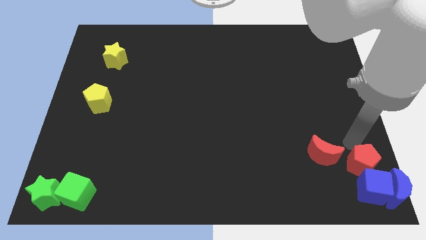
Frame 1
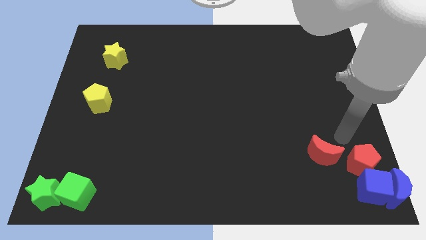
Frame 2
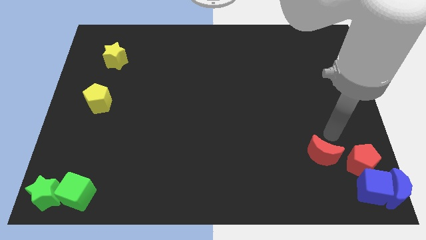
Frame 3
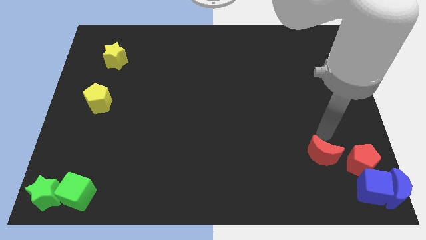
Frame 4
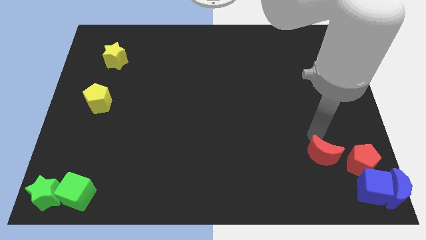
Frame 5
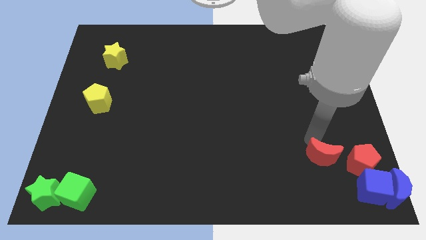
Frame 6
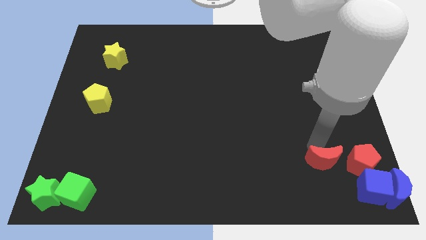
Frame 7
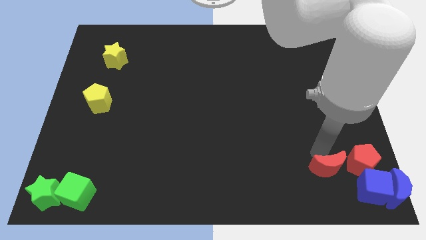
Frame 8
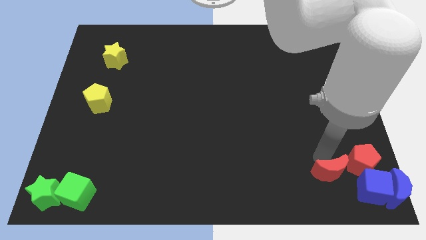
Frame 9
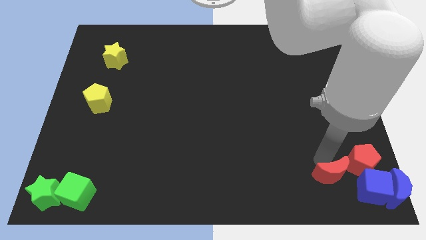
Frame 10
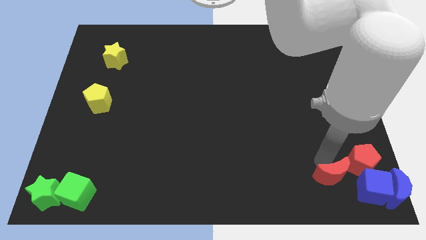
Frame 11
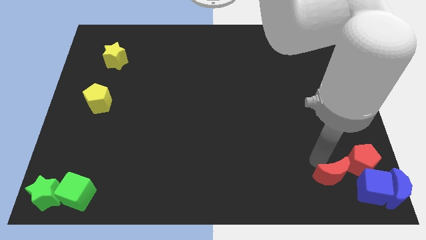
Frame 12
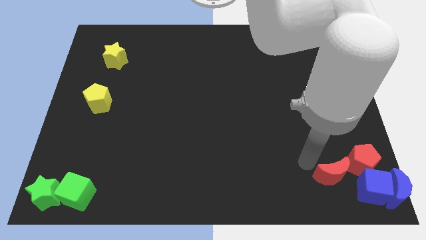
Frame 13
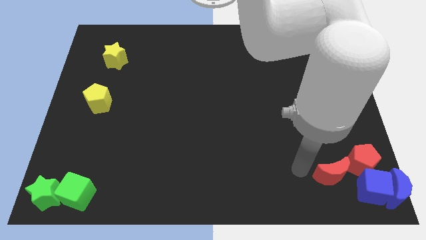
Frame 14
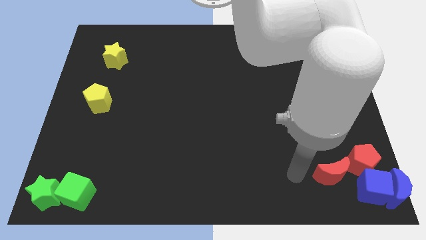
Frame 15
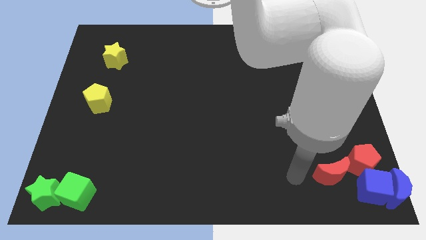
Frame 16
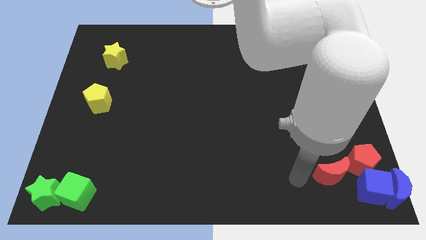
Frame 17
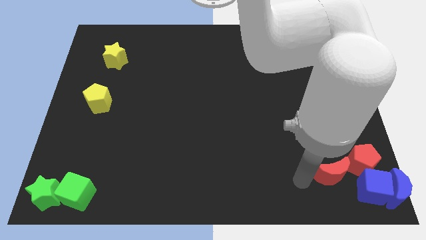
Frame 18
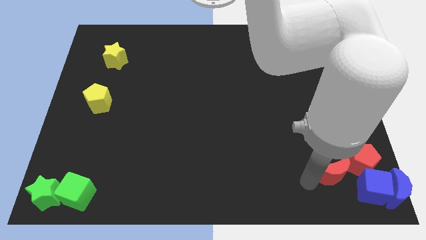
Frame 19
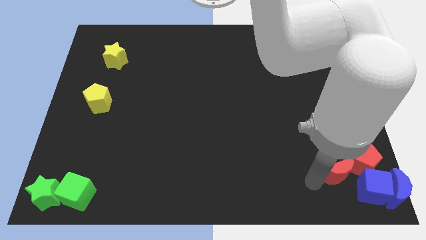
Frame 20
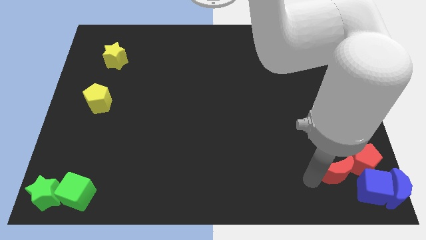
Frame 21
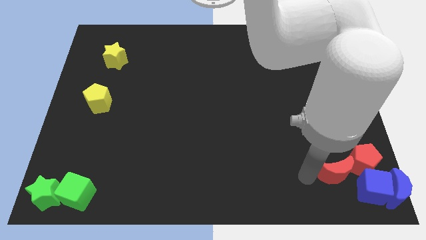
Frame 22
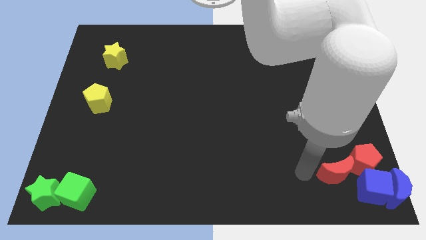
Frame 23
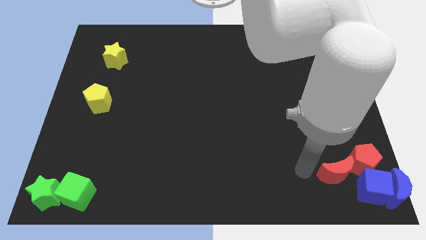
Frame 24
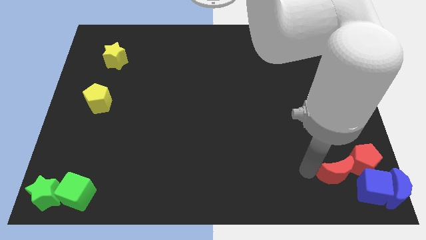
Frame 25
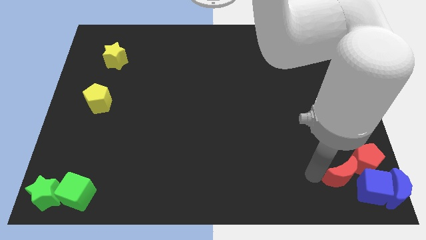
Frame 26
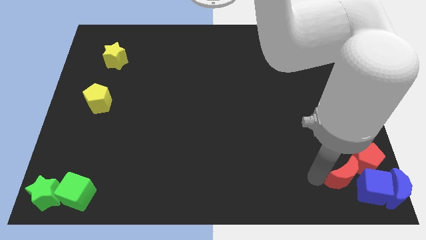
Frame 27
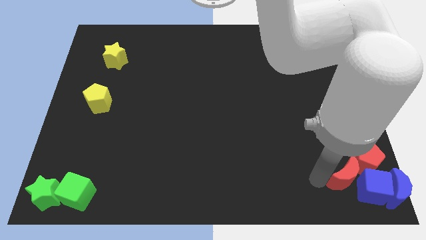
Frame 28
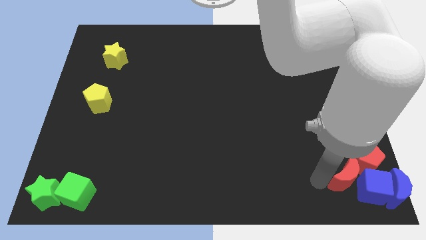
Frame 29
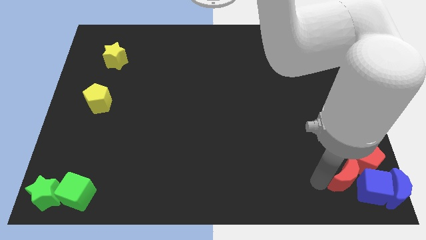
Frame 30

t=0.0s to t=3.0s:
place red crescent beside blue cube

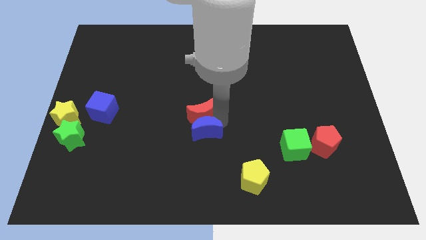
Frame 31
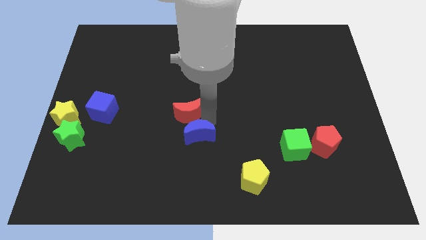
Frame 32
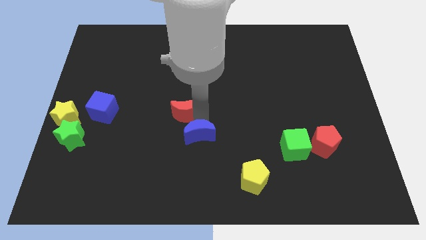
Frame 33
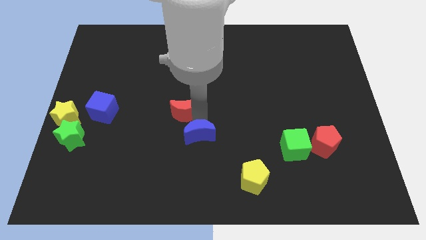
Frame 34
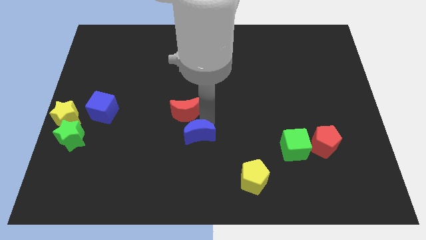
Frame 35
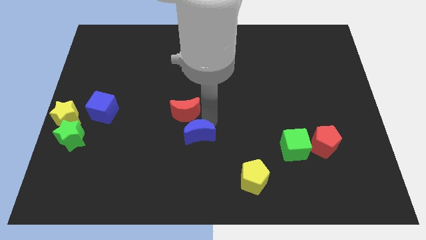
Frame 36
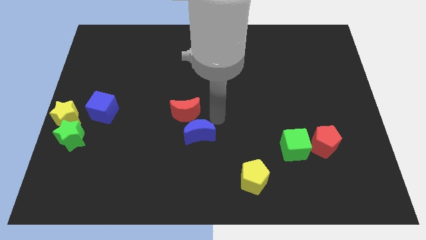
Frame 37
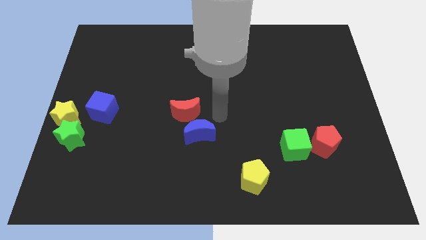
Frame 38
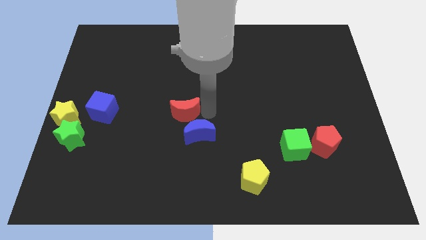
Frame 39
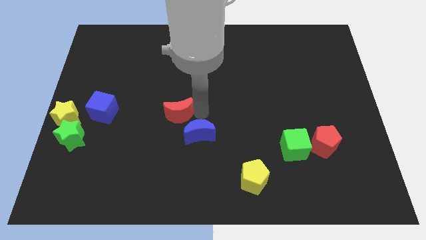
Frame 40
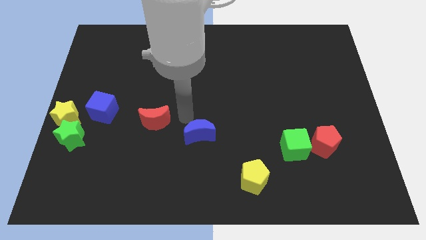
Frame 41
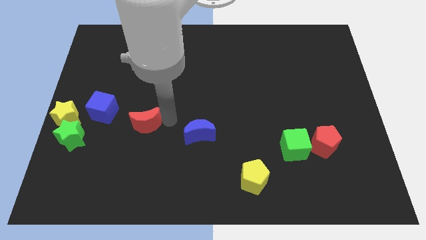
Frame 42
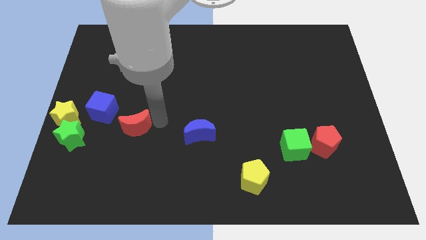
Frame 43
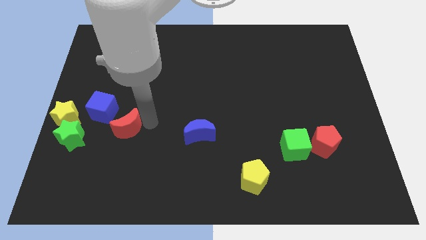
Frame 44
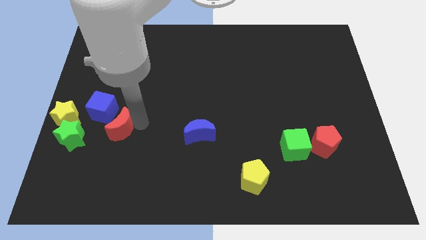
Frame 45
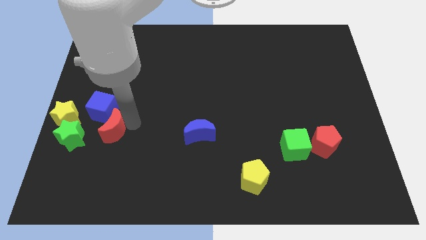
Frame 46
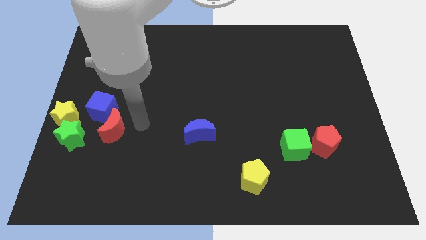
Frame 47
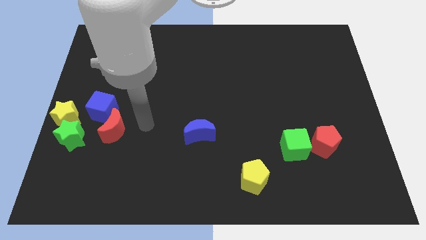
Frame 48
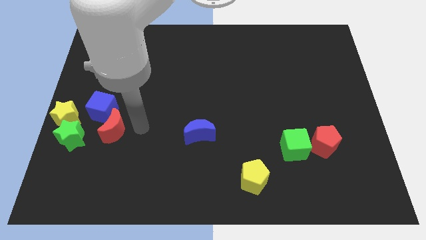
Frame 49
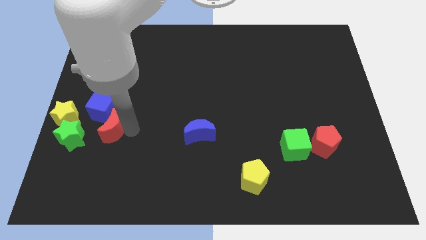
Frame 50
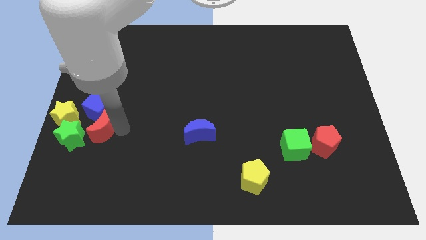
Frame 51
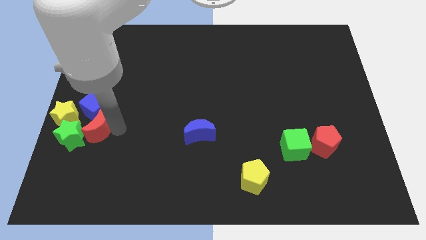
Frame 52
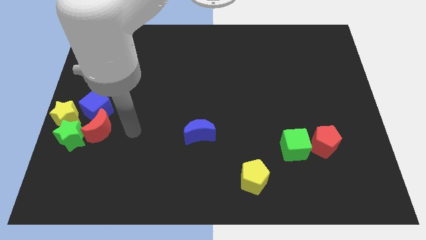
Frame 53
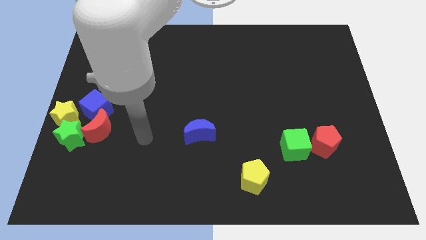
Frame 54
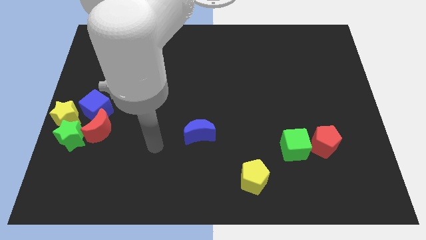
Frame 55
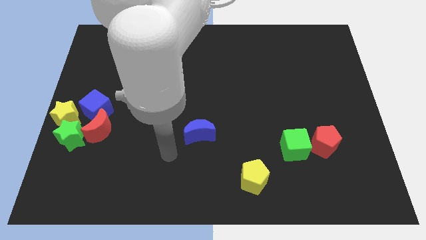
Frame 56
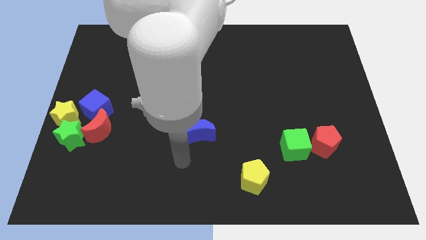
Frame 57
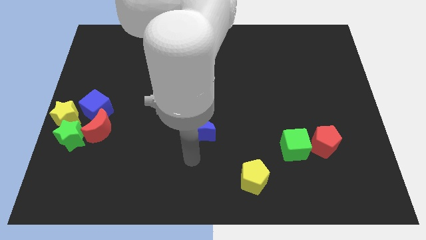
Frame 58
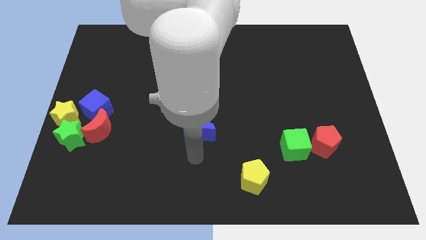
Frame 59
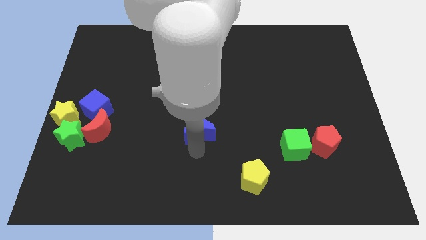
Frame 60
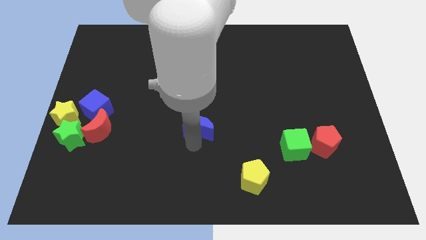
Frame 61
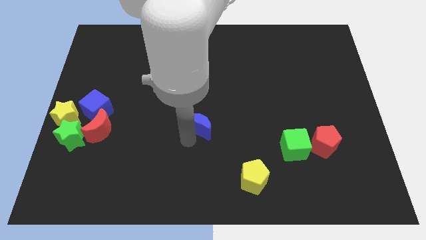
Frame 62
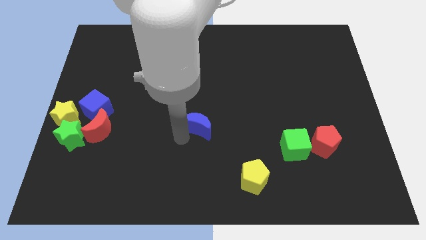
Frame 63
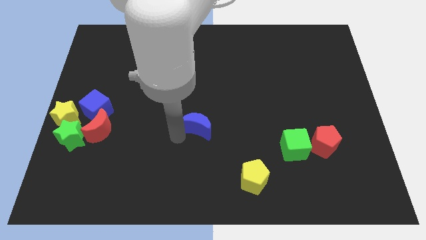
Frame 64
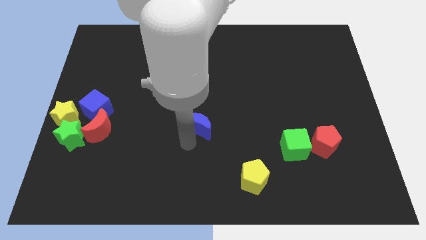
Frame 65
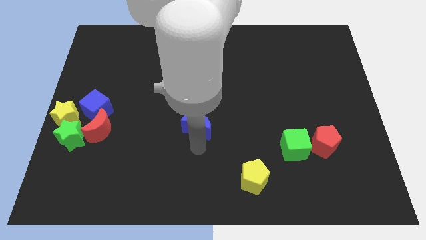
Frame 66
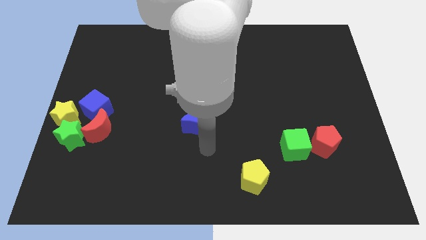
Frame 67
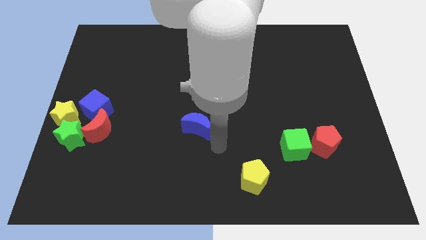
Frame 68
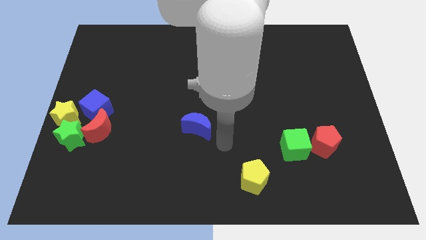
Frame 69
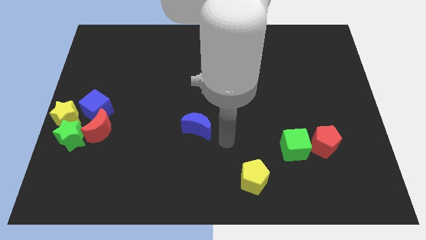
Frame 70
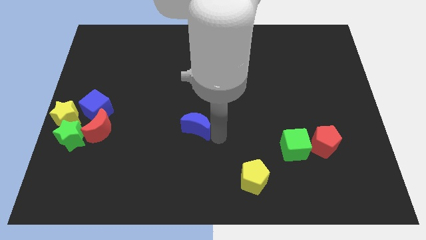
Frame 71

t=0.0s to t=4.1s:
push red moon in to blue cube

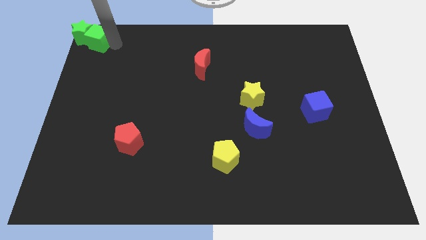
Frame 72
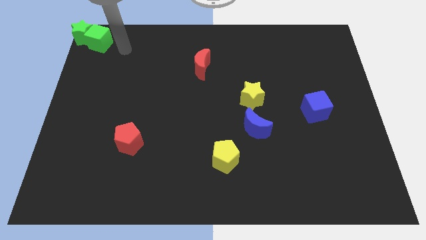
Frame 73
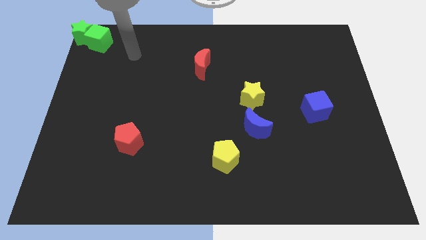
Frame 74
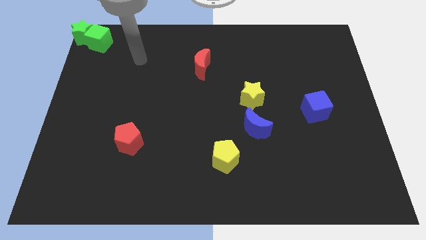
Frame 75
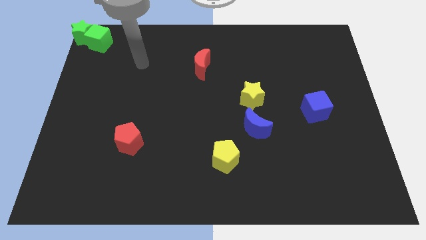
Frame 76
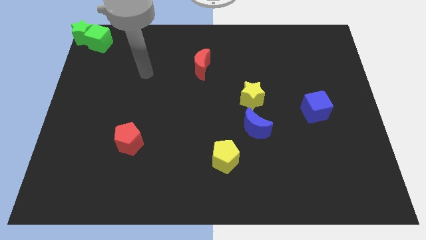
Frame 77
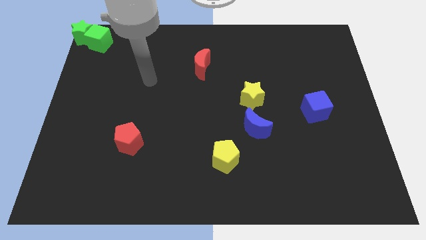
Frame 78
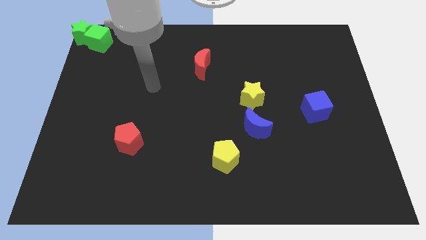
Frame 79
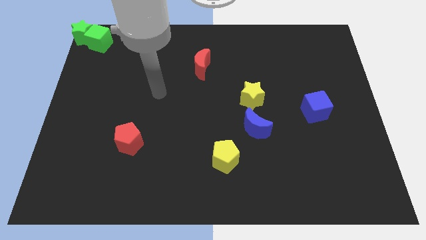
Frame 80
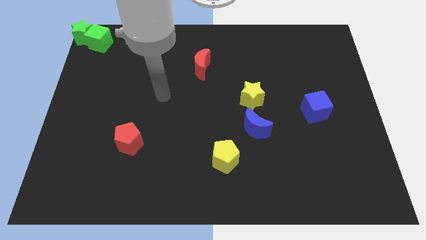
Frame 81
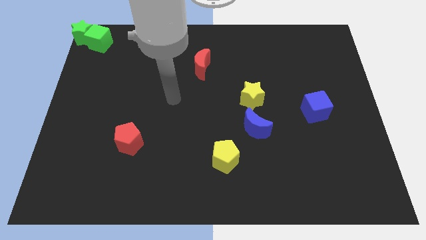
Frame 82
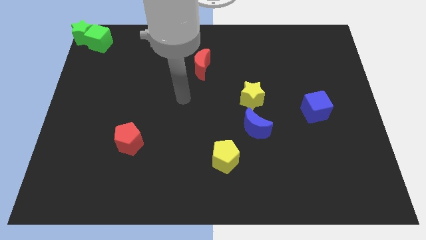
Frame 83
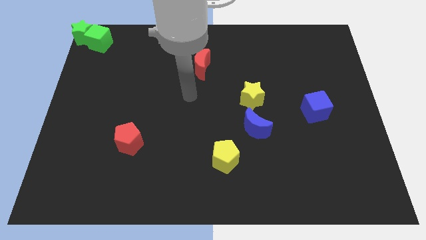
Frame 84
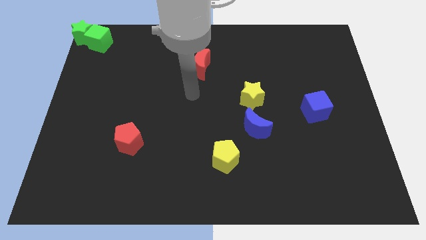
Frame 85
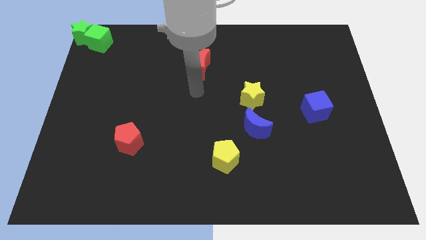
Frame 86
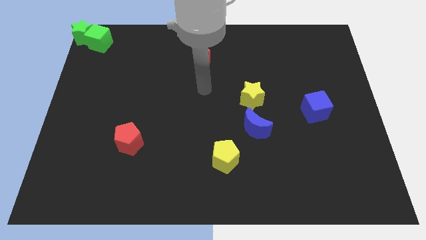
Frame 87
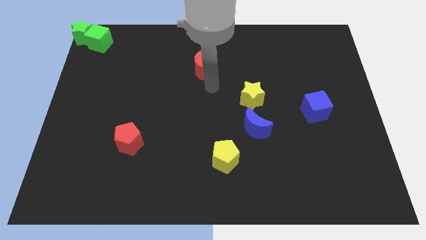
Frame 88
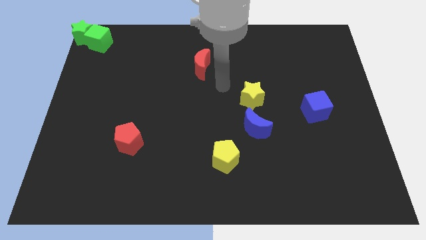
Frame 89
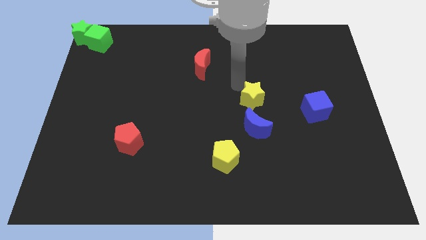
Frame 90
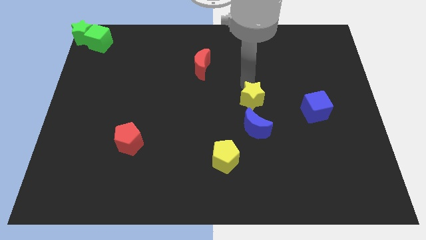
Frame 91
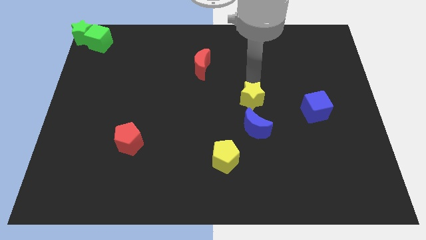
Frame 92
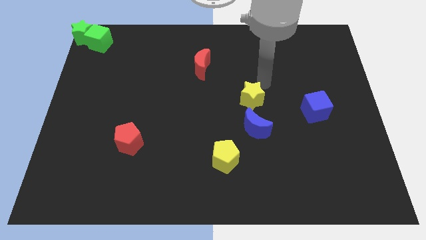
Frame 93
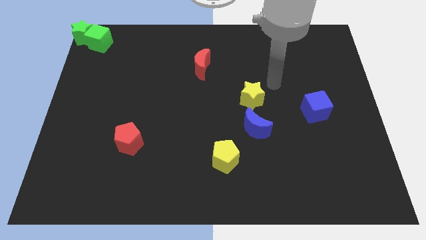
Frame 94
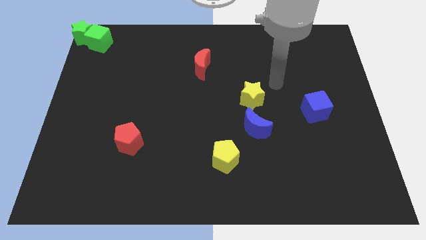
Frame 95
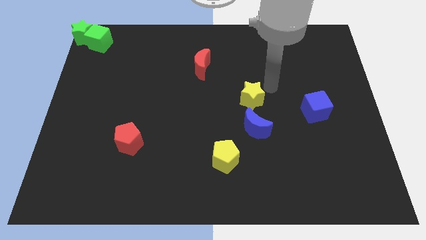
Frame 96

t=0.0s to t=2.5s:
move your arm away from the green cube
